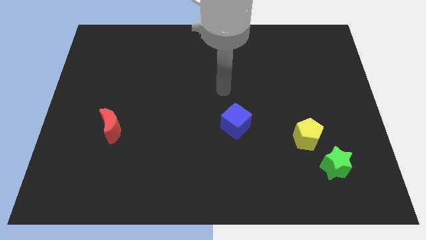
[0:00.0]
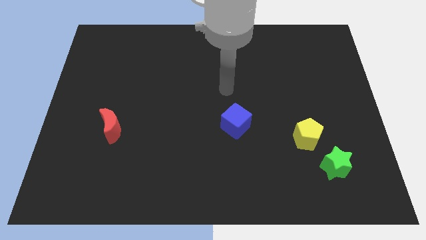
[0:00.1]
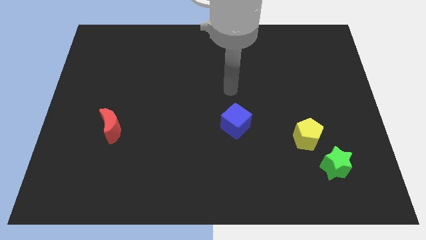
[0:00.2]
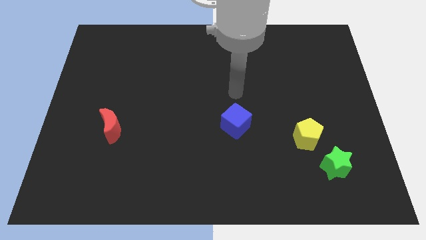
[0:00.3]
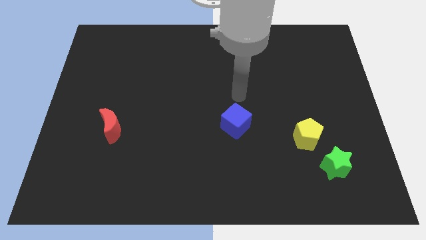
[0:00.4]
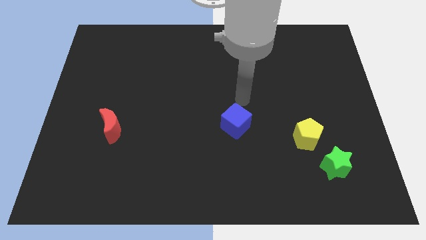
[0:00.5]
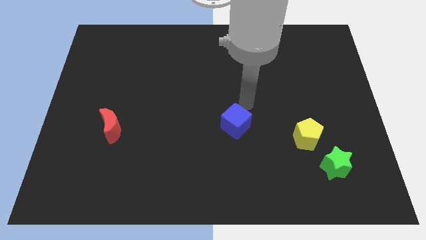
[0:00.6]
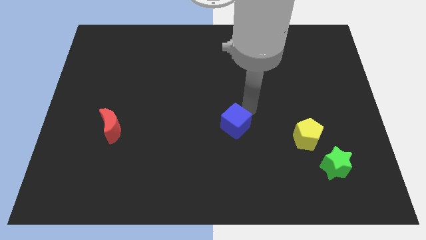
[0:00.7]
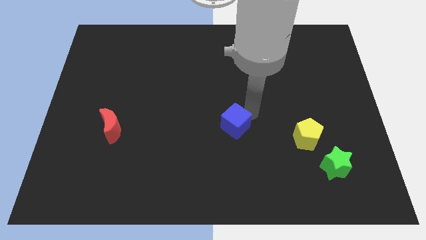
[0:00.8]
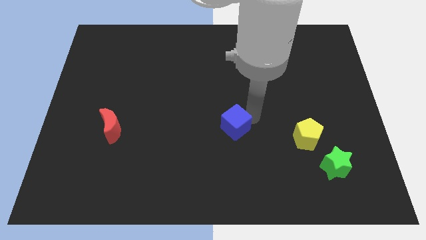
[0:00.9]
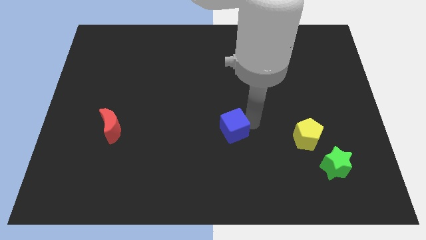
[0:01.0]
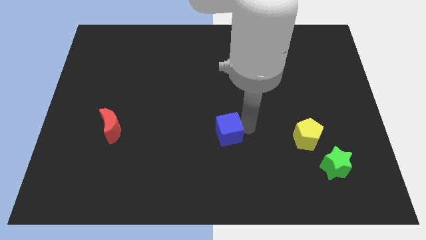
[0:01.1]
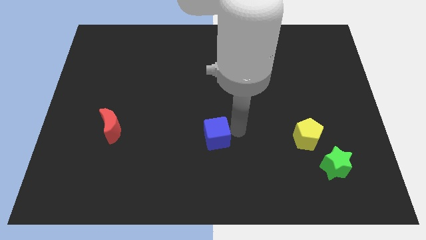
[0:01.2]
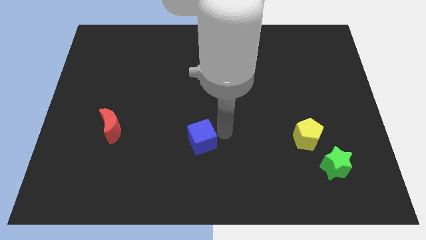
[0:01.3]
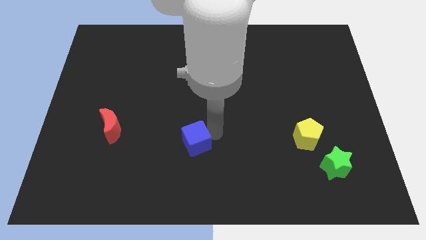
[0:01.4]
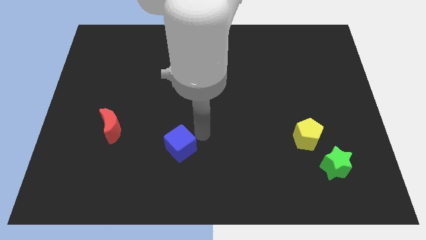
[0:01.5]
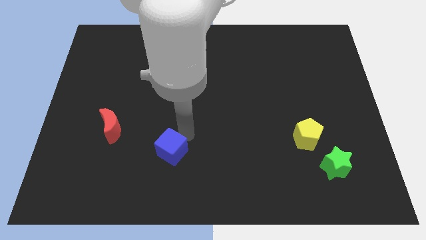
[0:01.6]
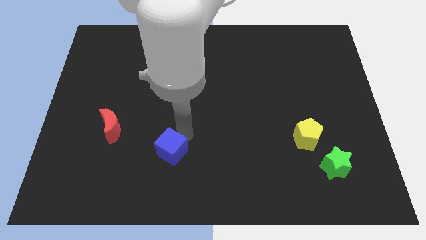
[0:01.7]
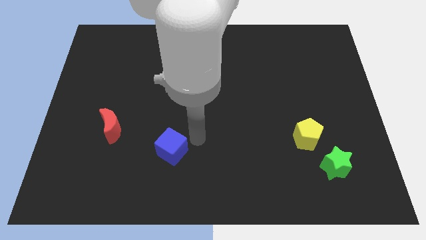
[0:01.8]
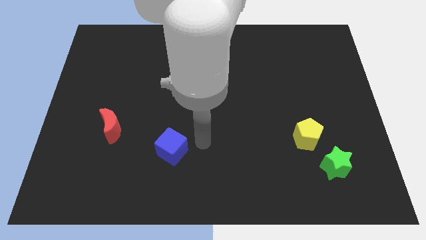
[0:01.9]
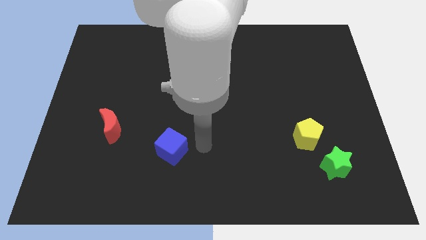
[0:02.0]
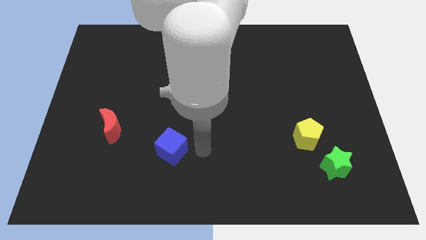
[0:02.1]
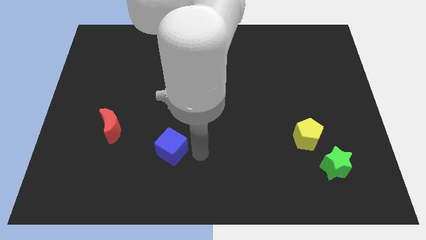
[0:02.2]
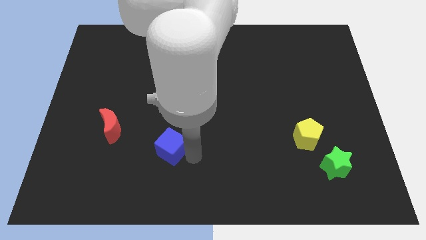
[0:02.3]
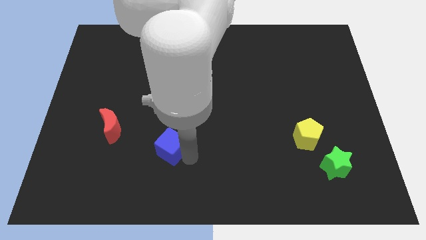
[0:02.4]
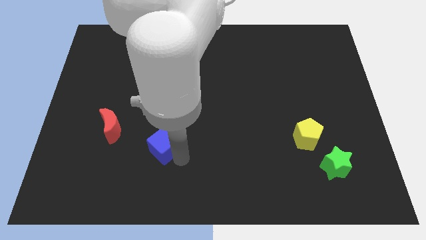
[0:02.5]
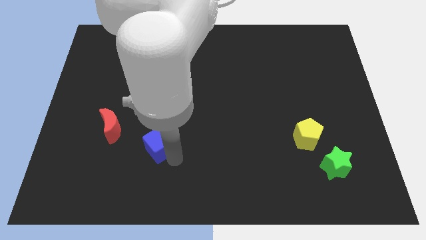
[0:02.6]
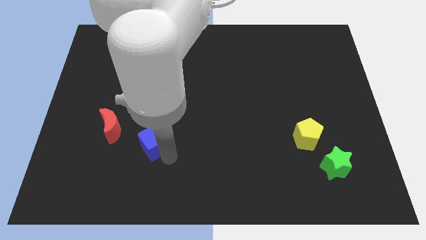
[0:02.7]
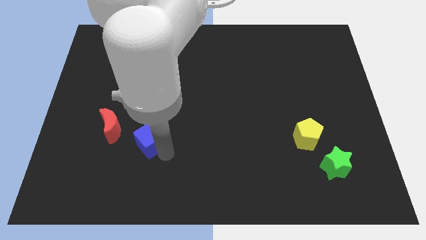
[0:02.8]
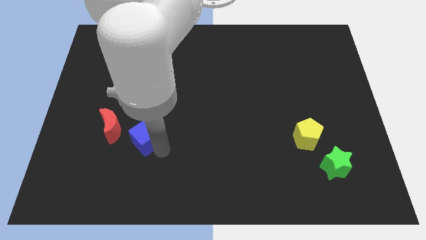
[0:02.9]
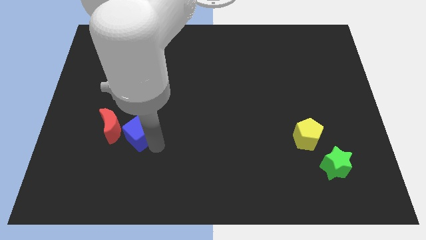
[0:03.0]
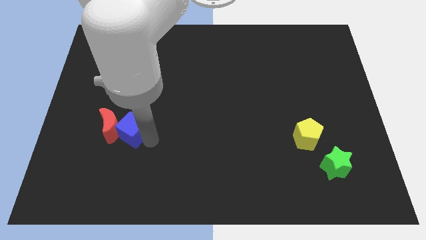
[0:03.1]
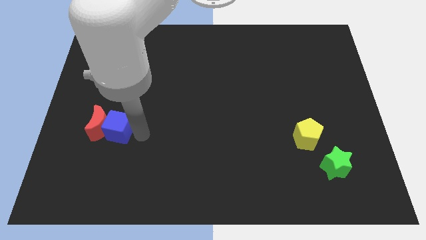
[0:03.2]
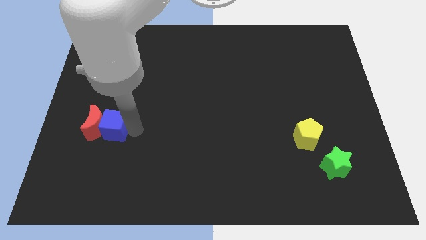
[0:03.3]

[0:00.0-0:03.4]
slide the blue block next to the moon

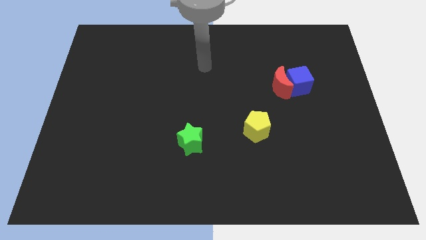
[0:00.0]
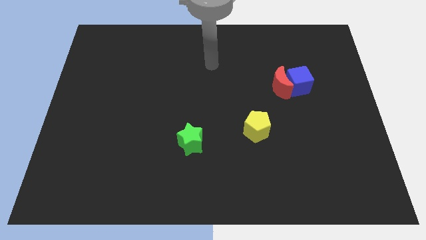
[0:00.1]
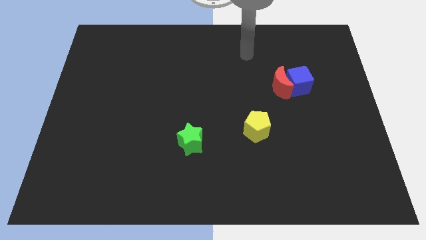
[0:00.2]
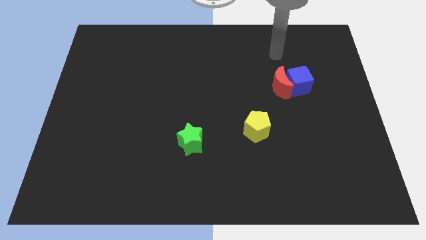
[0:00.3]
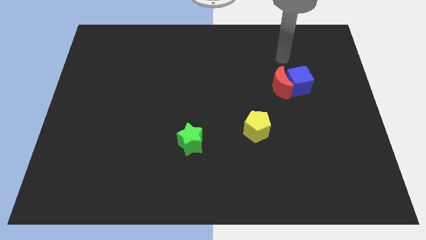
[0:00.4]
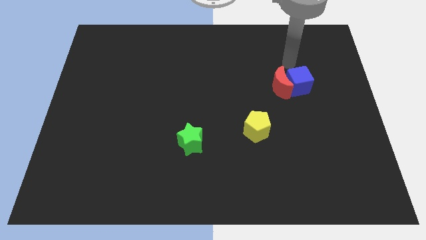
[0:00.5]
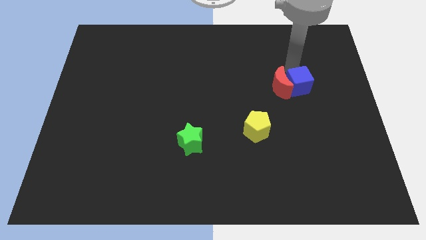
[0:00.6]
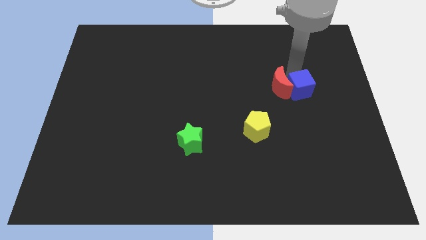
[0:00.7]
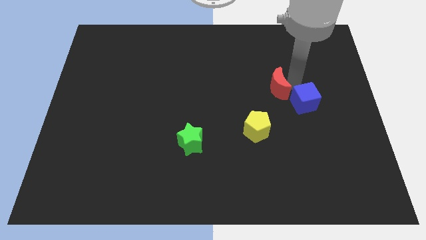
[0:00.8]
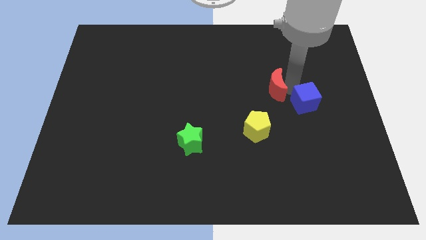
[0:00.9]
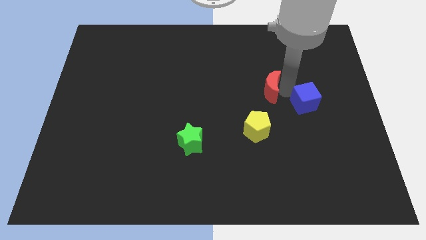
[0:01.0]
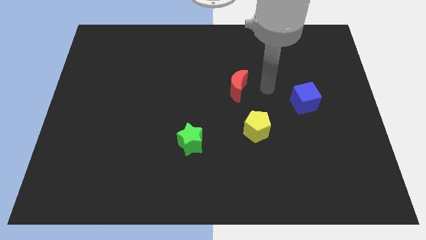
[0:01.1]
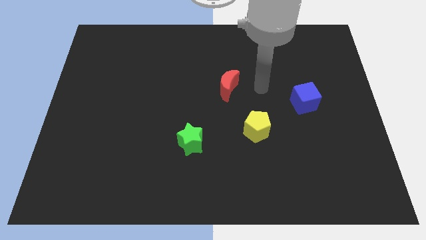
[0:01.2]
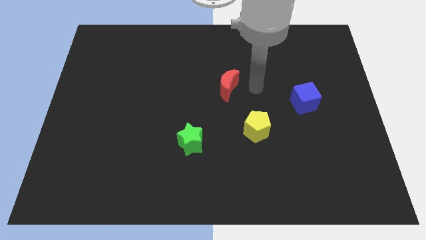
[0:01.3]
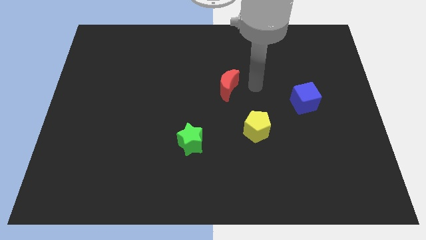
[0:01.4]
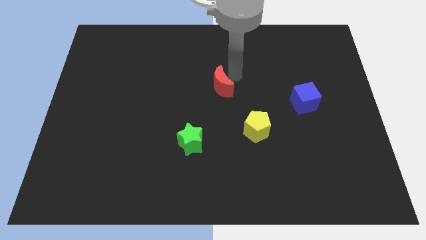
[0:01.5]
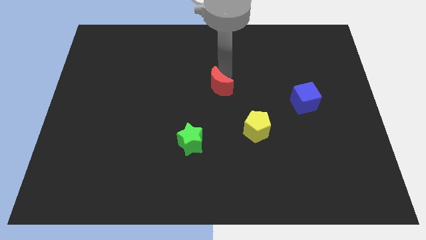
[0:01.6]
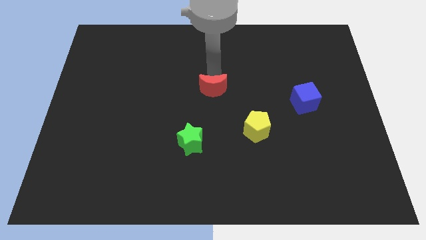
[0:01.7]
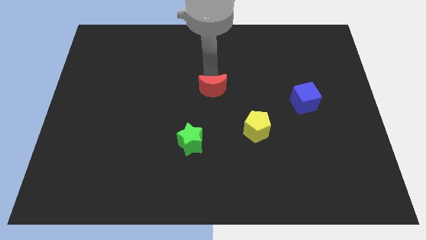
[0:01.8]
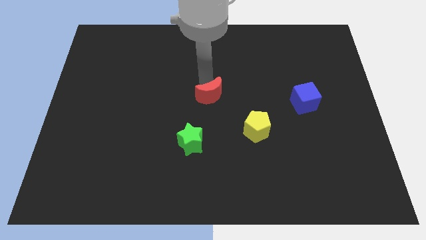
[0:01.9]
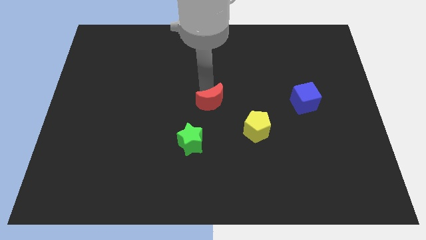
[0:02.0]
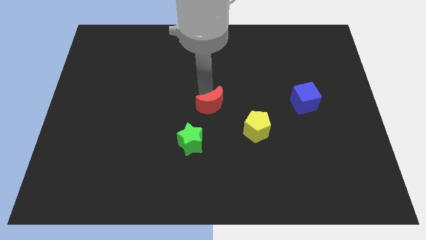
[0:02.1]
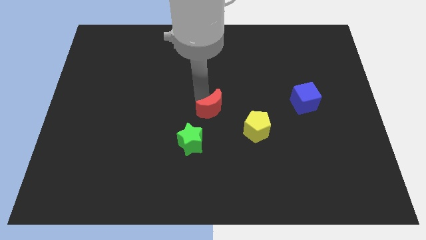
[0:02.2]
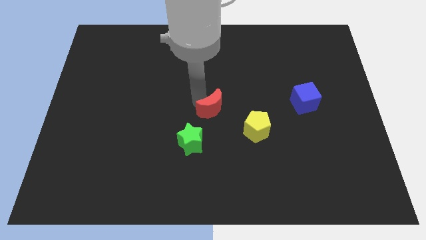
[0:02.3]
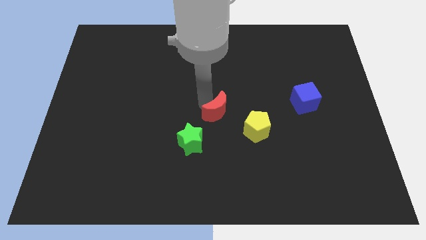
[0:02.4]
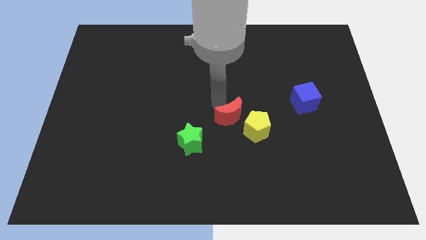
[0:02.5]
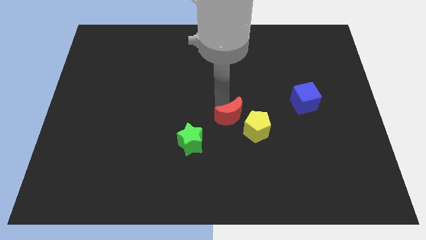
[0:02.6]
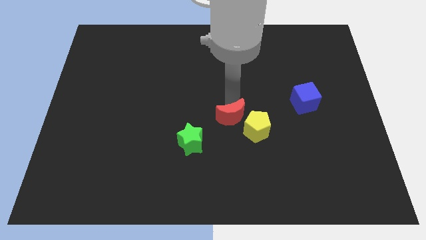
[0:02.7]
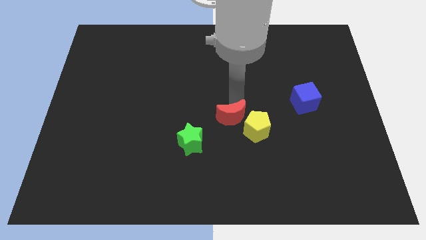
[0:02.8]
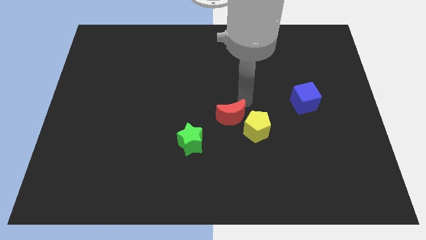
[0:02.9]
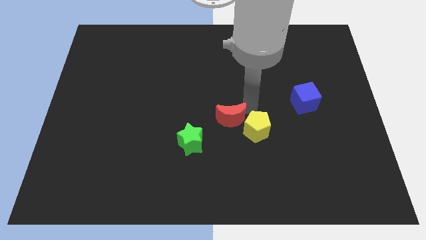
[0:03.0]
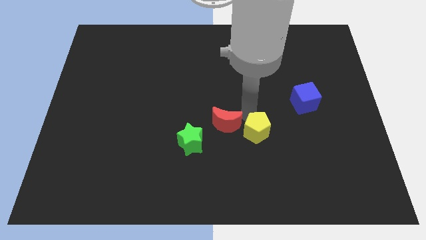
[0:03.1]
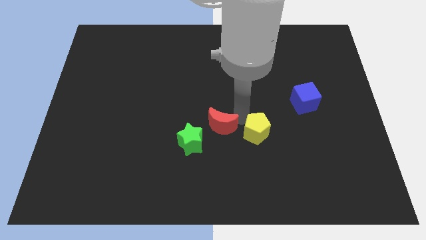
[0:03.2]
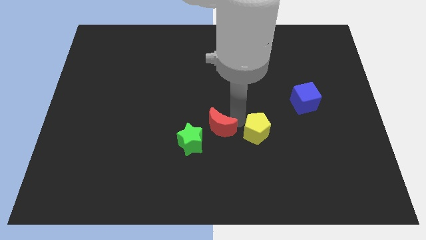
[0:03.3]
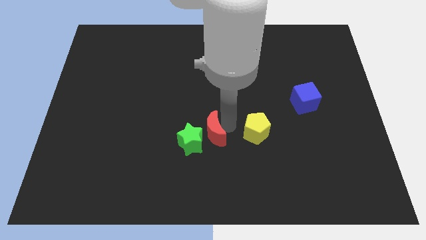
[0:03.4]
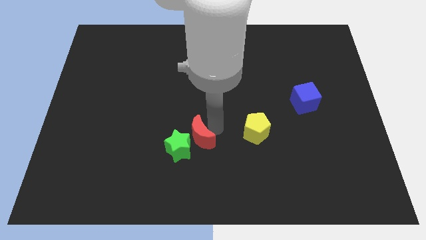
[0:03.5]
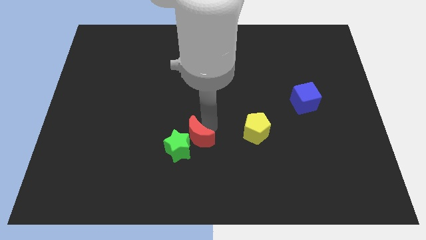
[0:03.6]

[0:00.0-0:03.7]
slide the red block towards the star

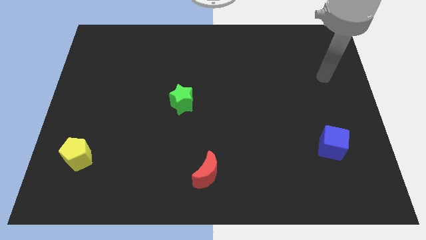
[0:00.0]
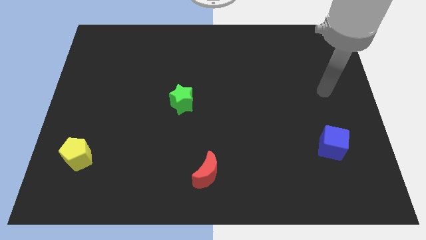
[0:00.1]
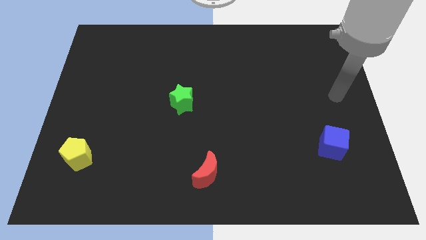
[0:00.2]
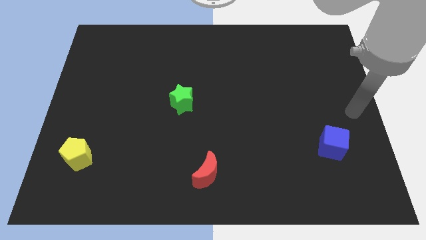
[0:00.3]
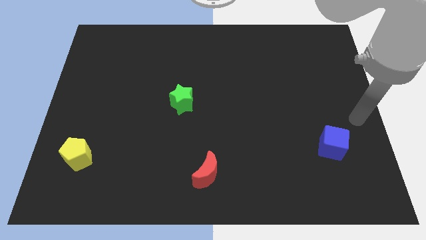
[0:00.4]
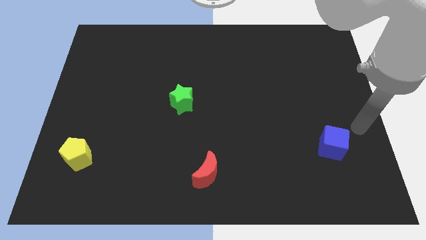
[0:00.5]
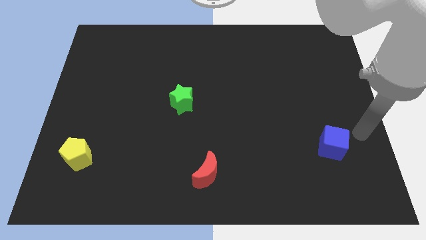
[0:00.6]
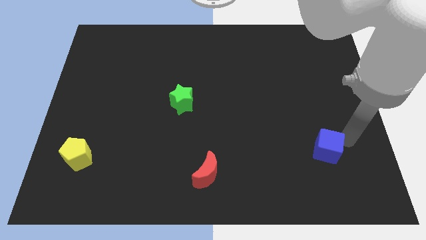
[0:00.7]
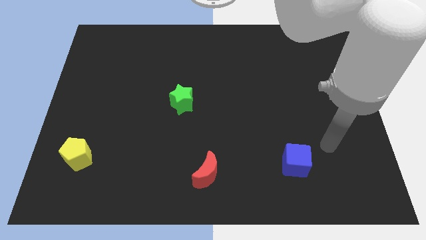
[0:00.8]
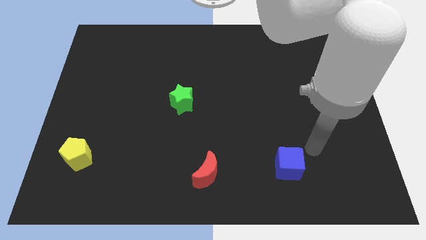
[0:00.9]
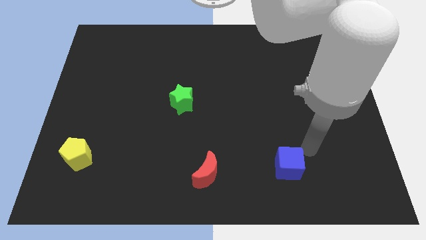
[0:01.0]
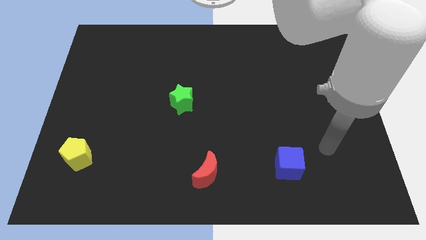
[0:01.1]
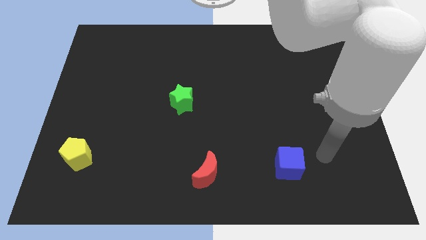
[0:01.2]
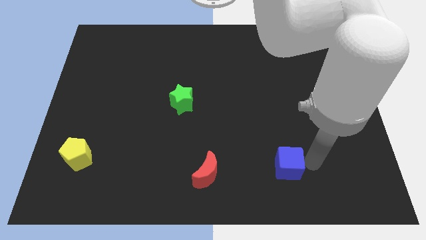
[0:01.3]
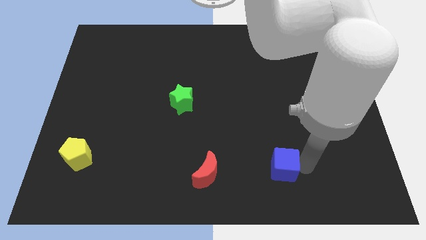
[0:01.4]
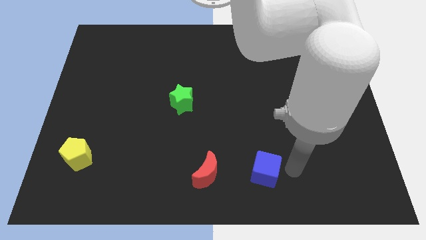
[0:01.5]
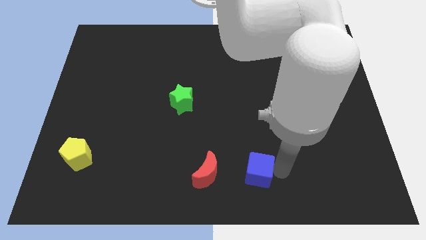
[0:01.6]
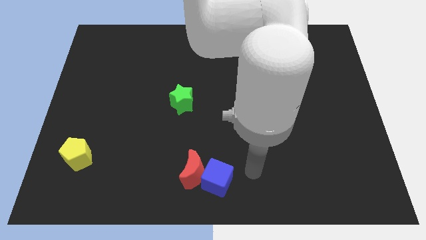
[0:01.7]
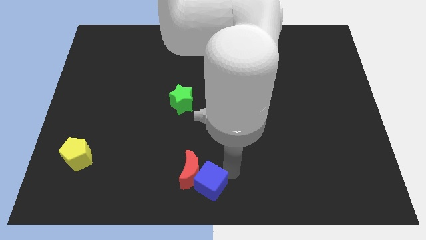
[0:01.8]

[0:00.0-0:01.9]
slide the blue cube to the red block
